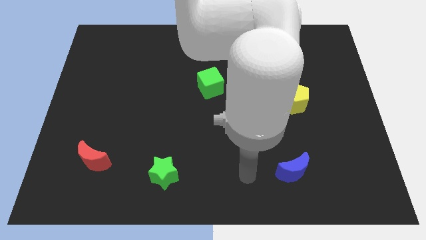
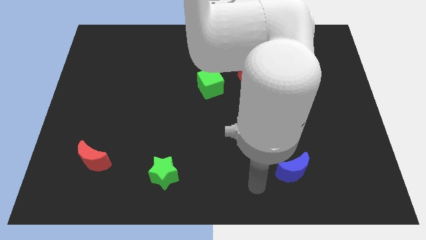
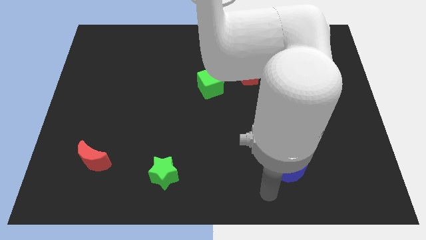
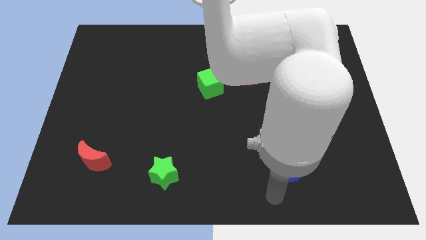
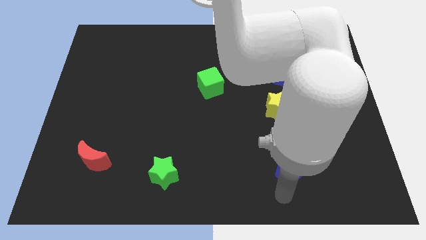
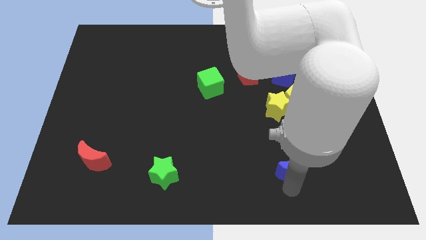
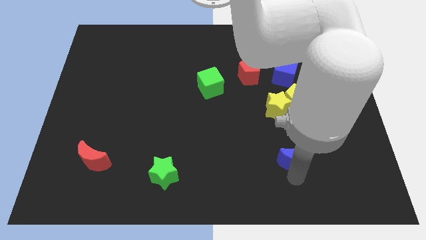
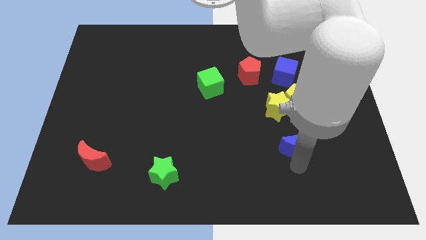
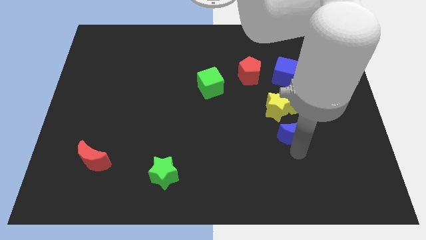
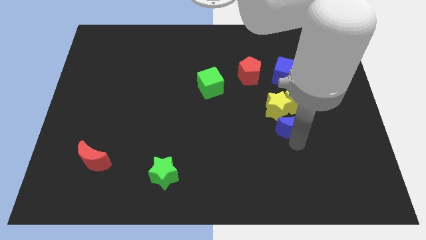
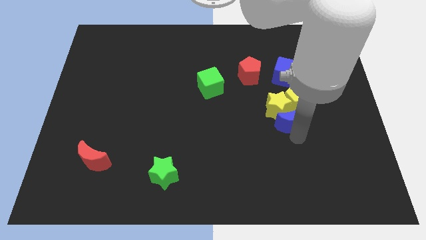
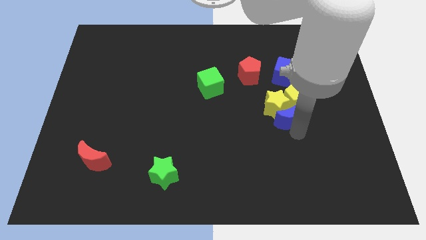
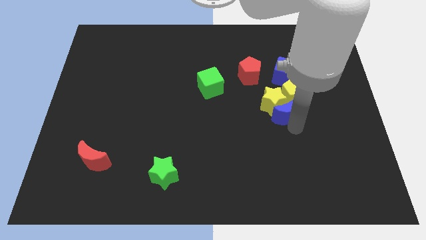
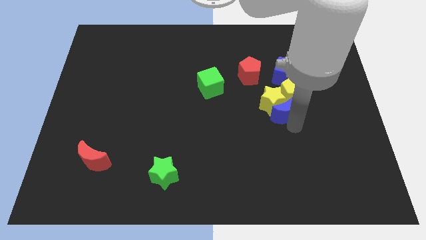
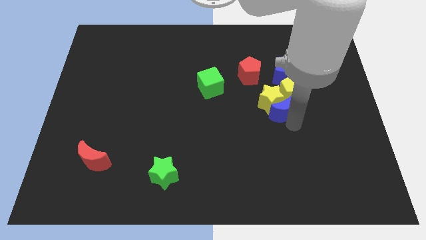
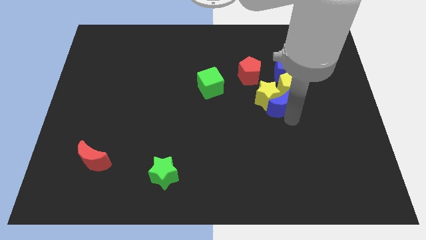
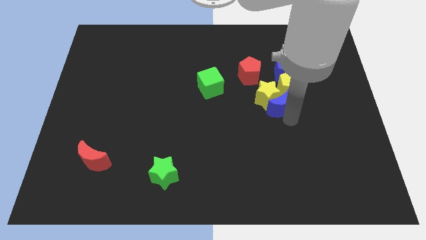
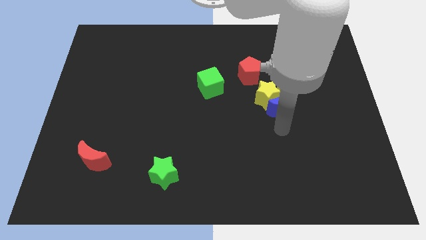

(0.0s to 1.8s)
push the blue moon along with the group of yellow blocks into the blue cube

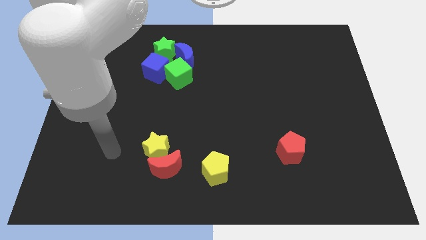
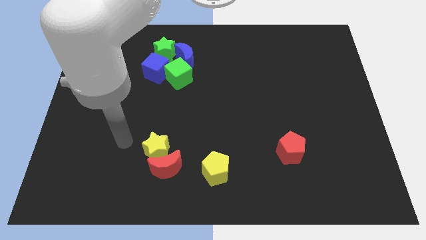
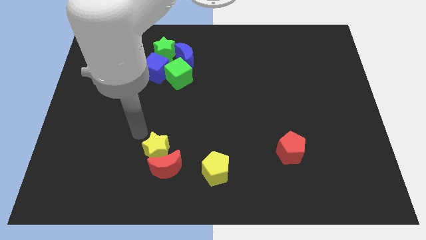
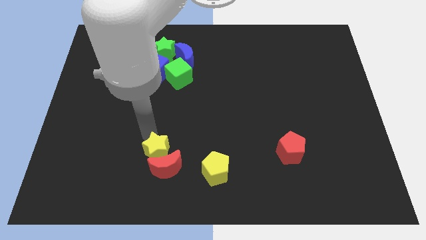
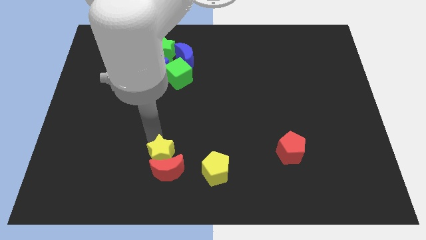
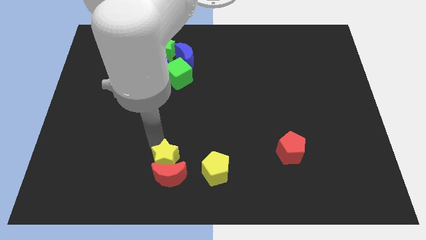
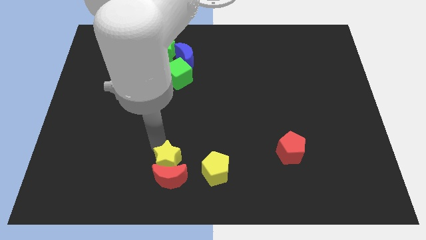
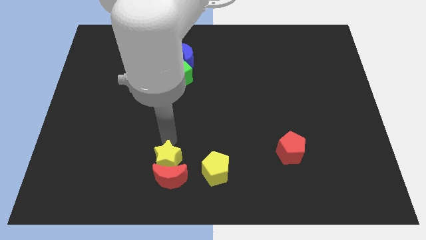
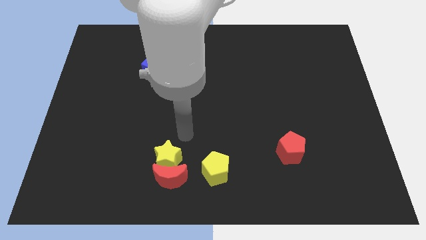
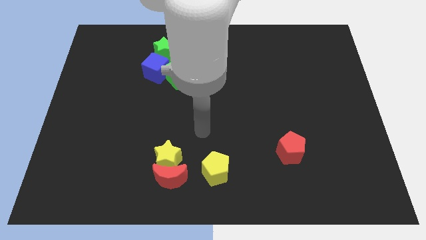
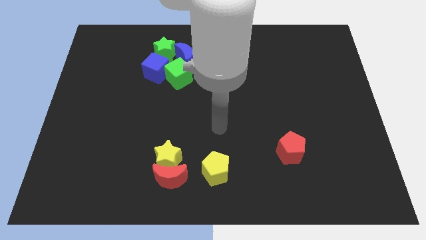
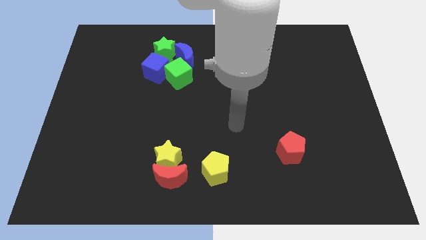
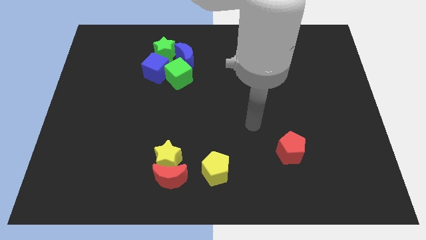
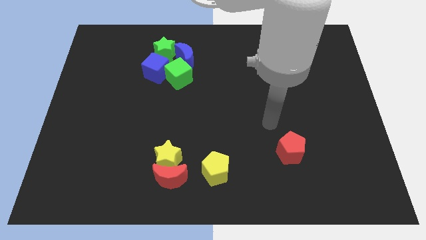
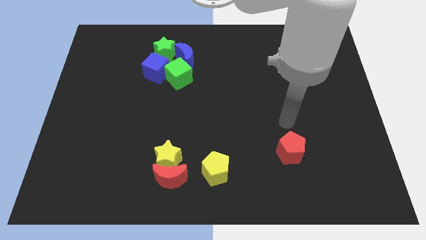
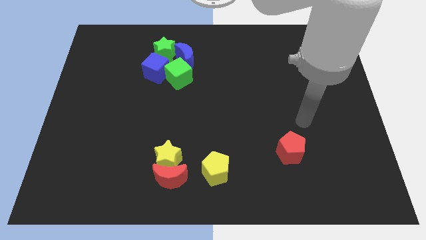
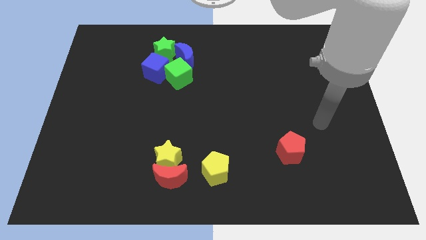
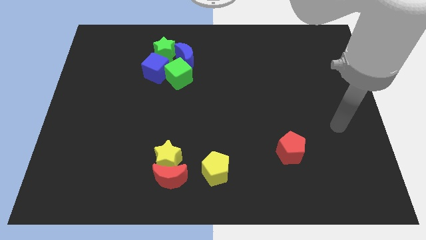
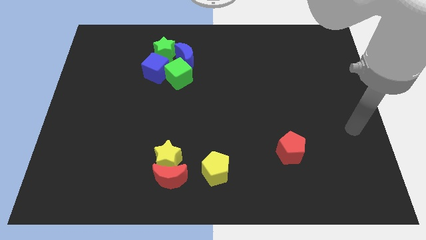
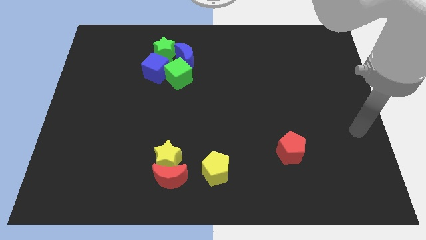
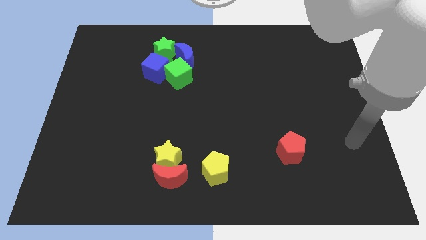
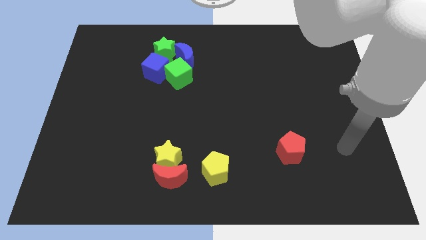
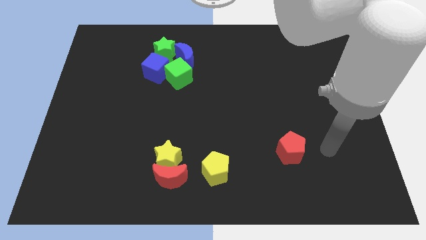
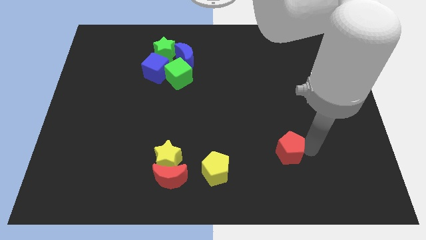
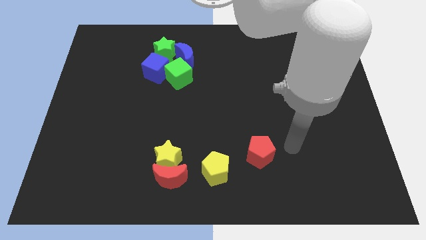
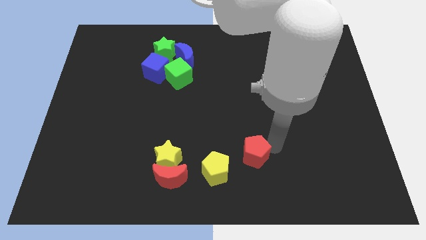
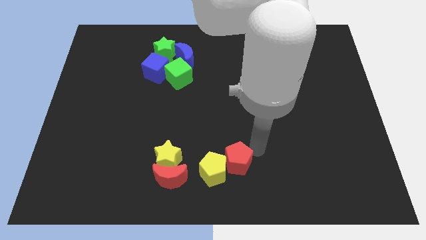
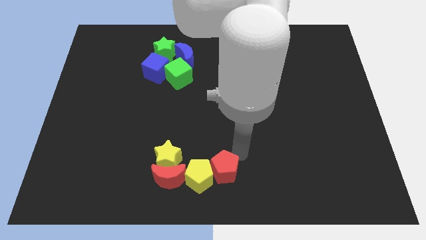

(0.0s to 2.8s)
push red pentagon slightly towards left

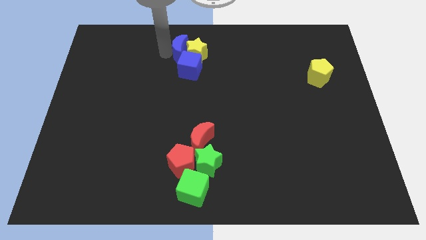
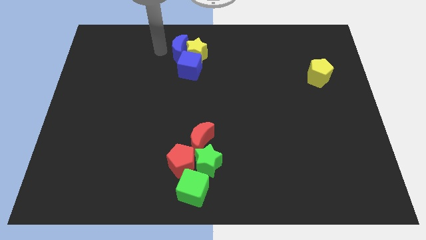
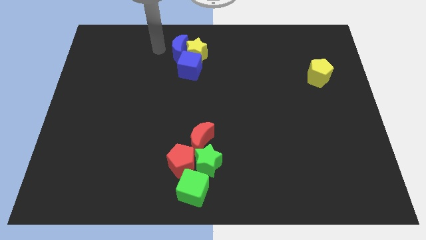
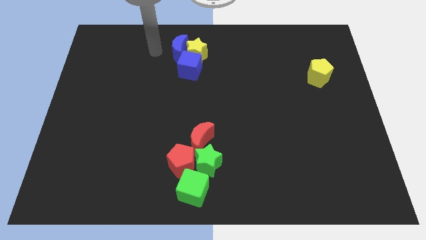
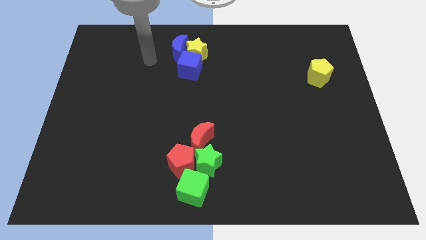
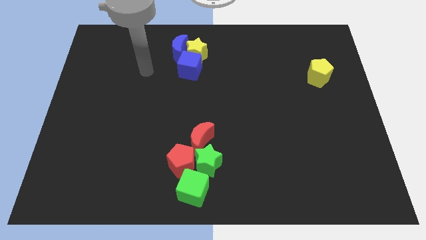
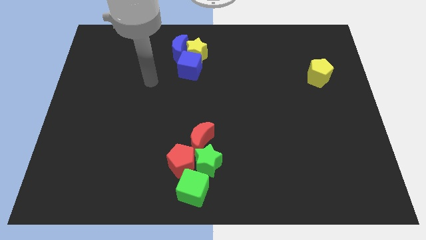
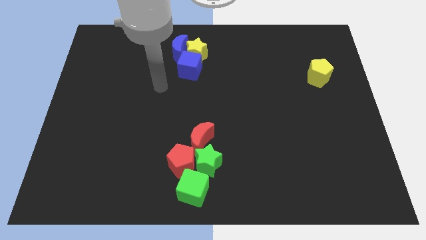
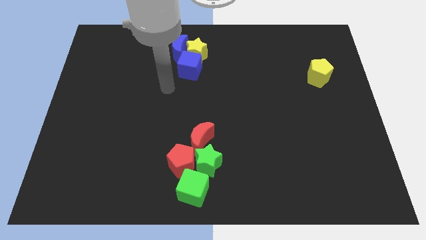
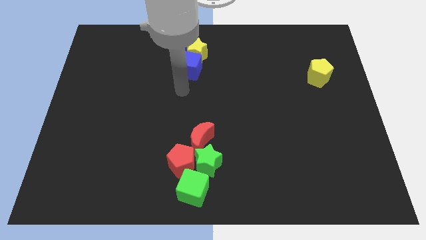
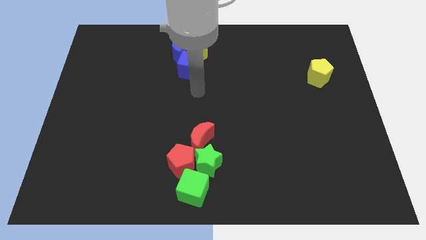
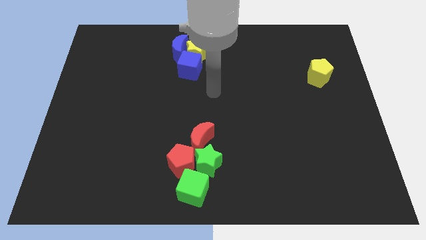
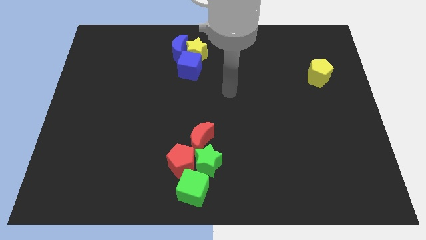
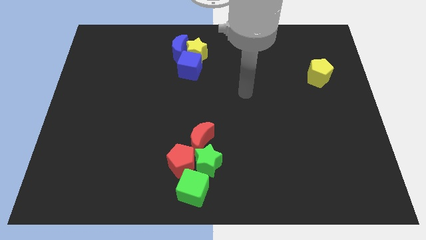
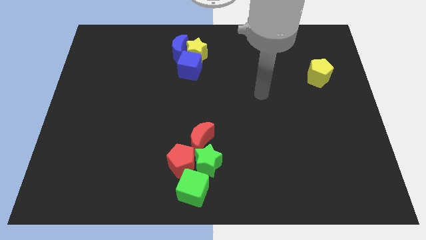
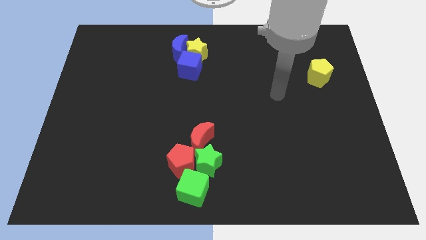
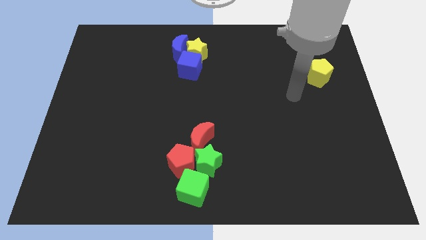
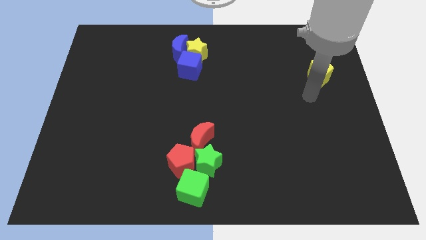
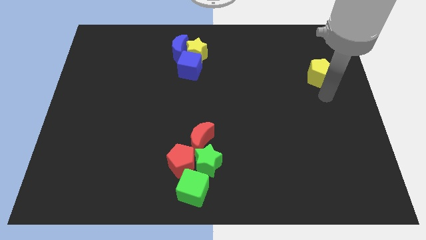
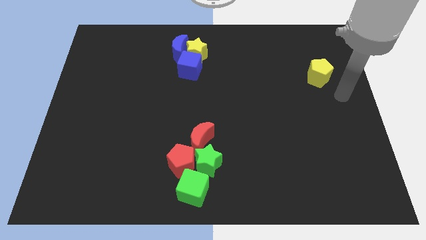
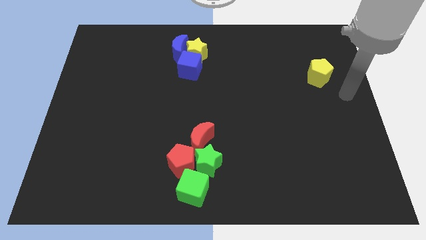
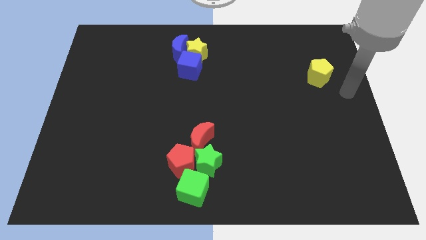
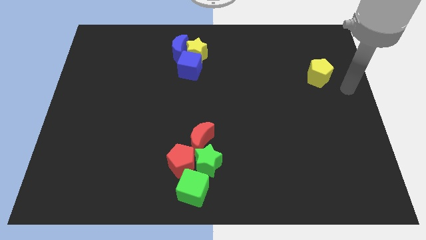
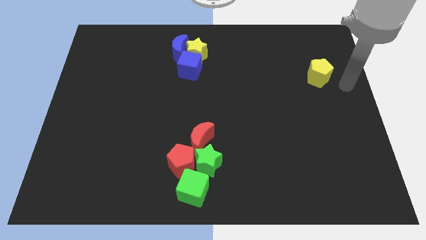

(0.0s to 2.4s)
move your arm right to the yellow pentagon

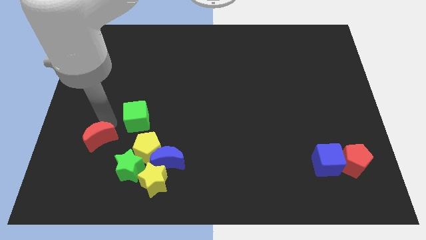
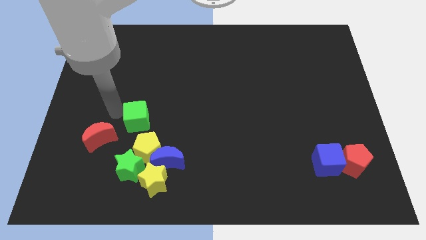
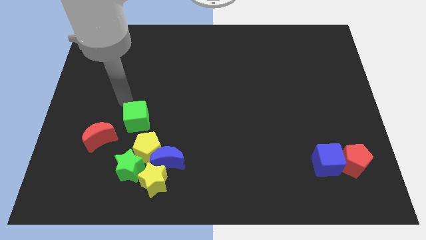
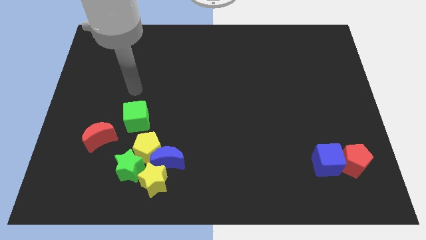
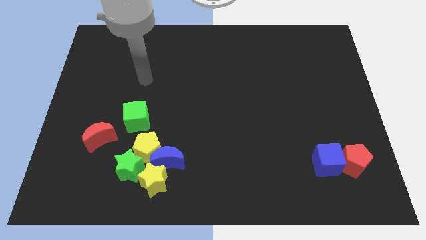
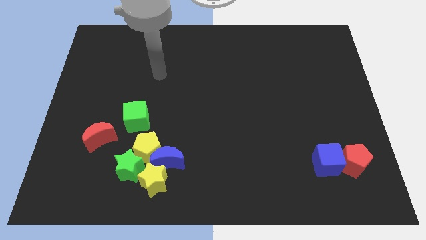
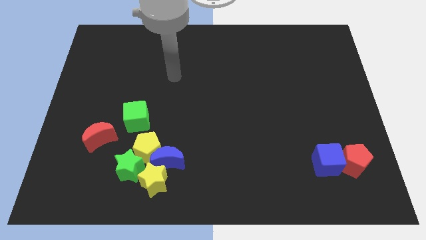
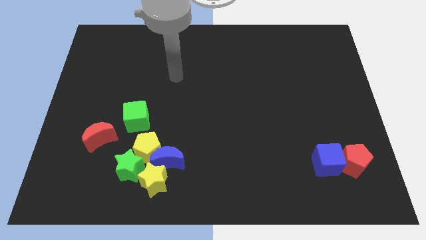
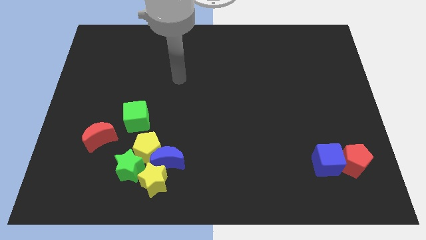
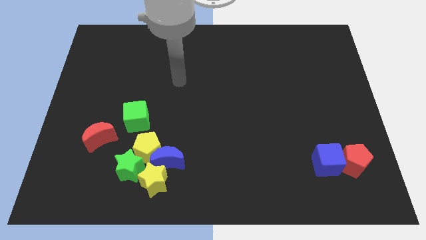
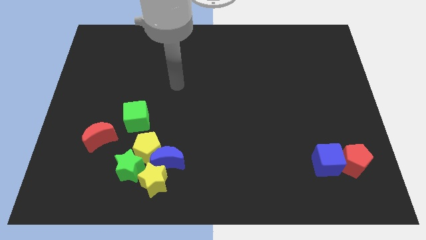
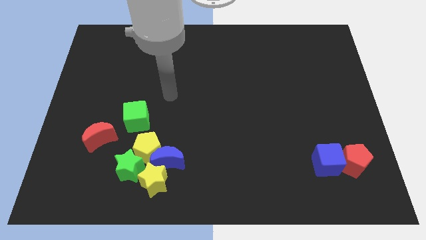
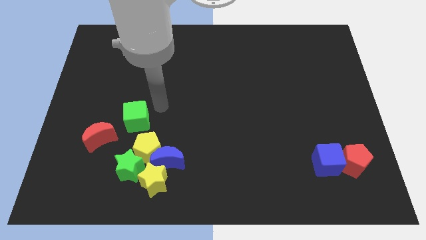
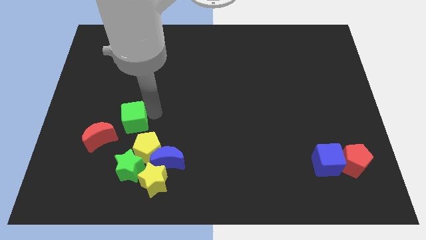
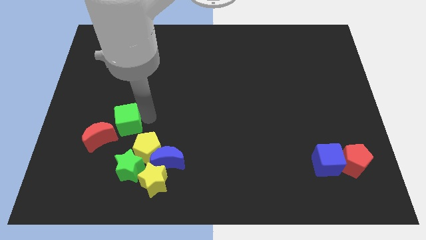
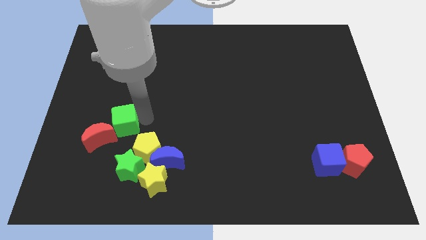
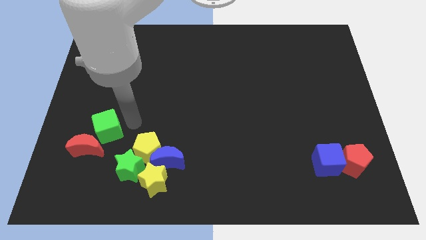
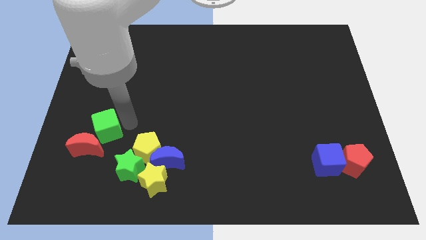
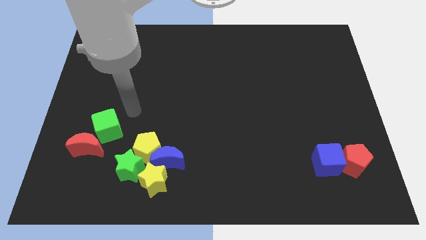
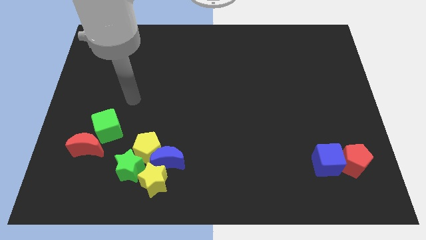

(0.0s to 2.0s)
push the green cube into the red crescent
